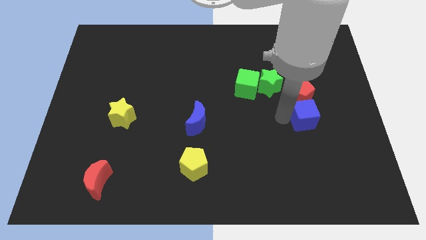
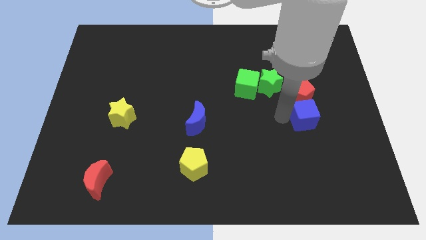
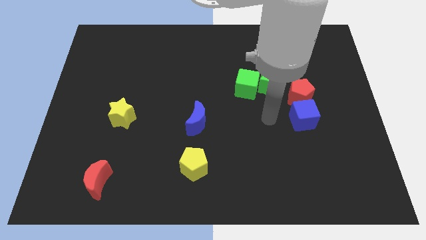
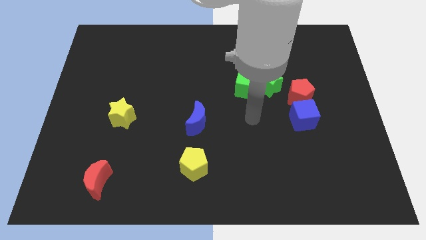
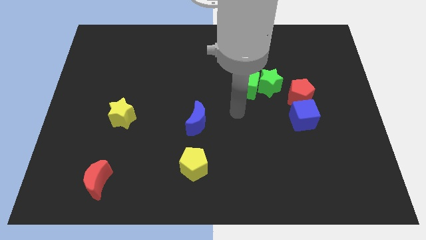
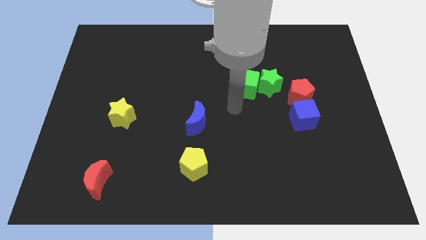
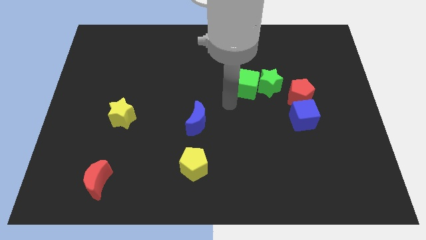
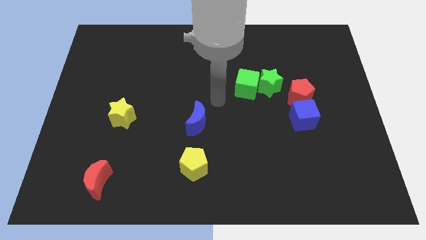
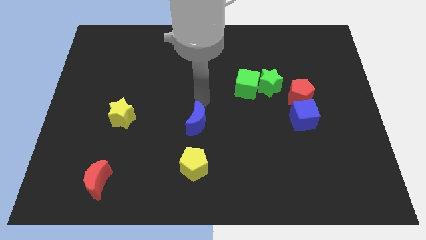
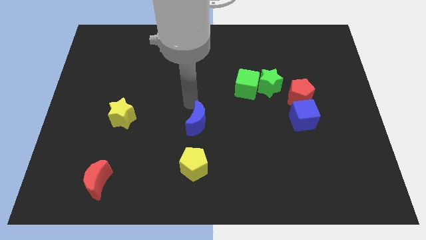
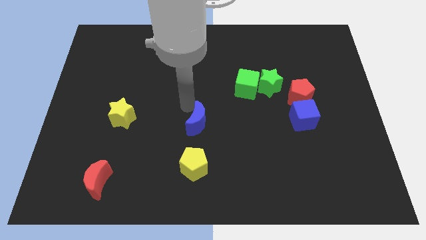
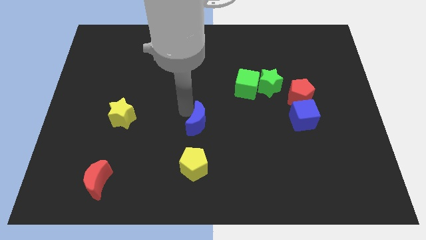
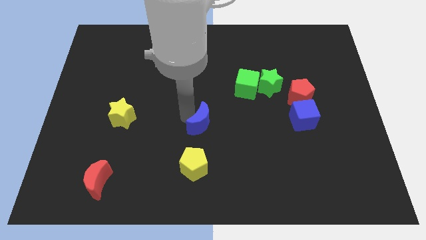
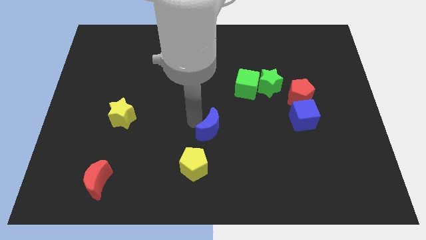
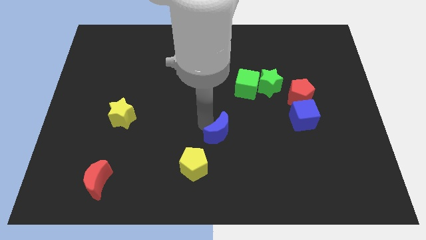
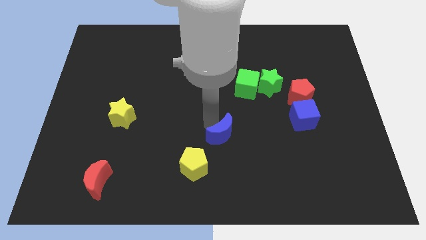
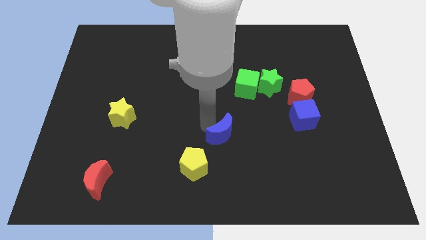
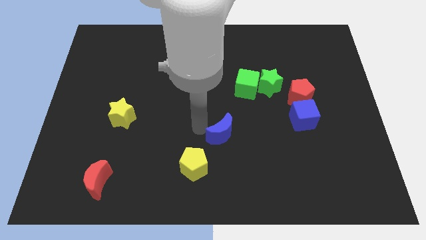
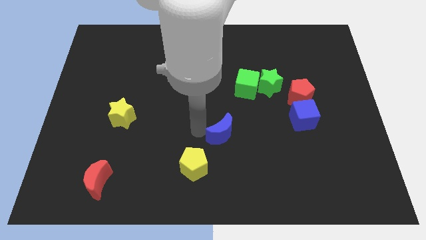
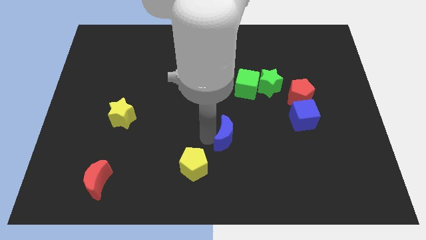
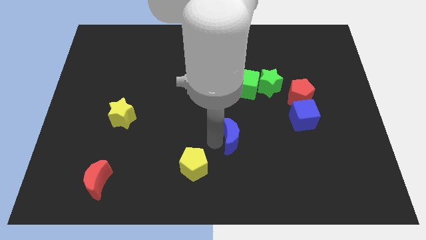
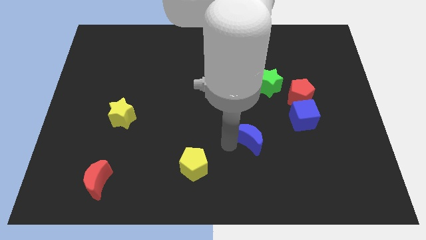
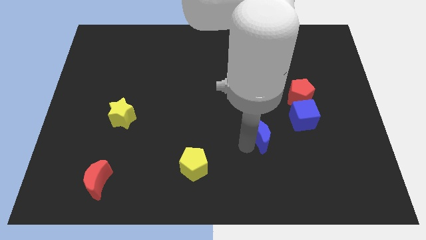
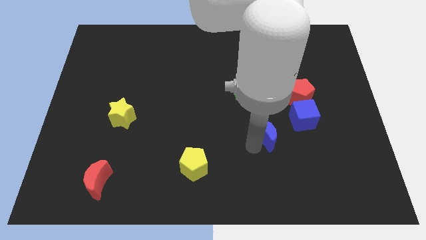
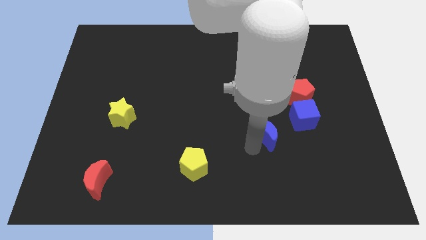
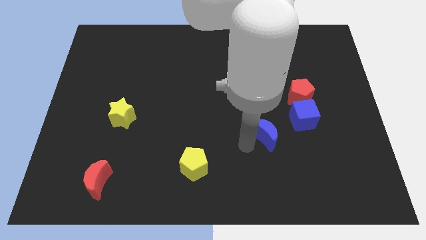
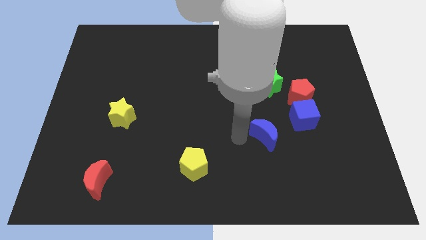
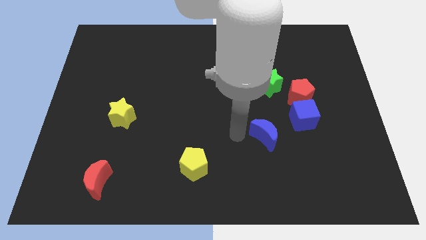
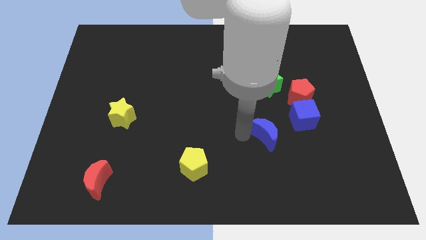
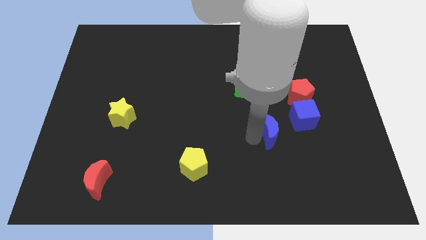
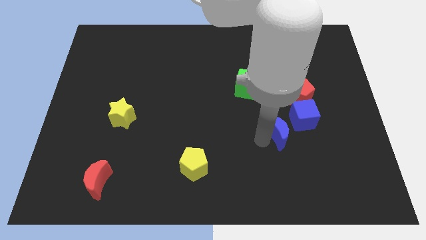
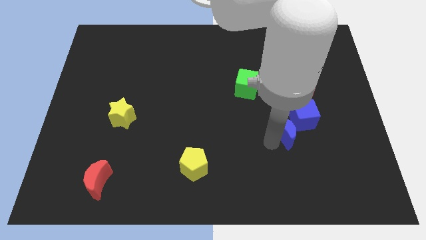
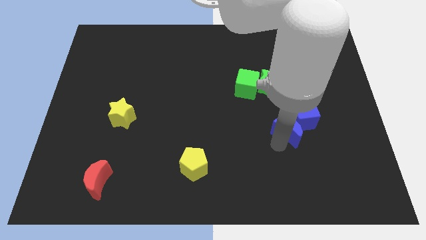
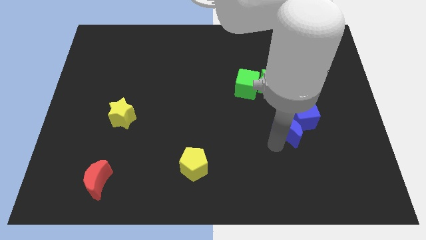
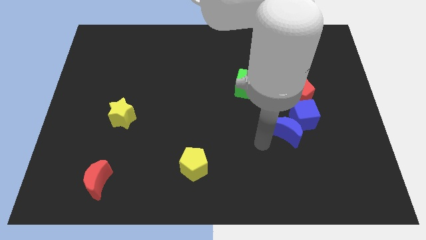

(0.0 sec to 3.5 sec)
move the blue moon into a blue cube

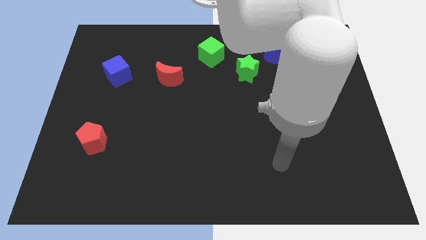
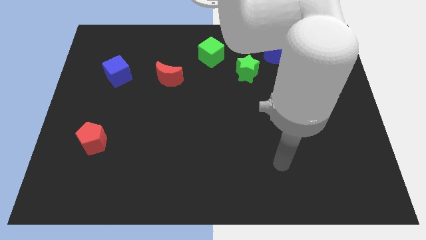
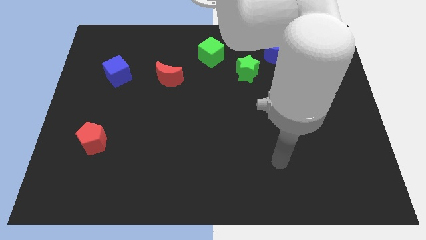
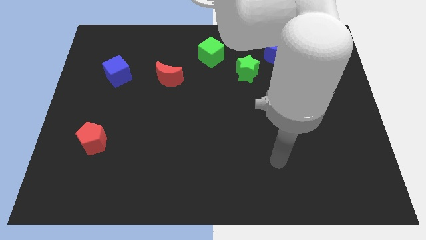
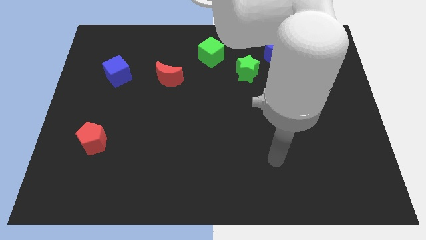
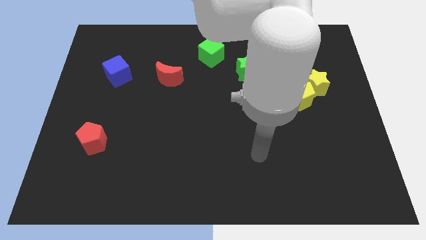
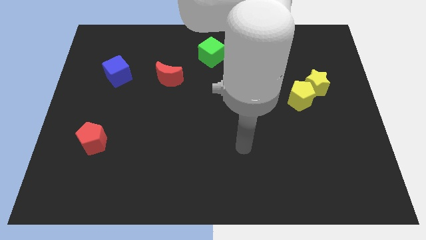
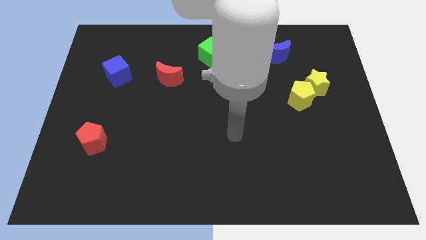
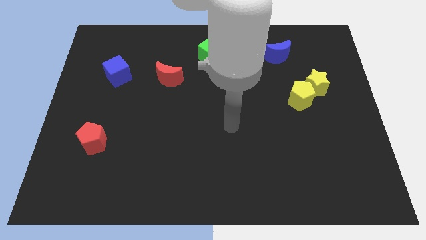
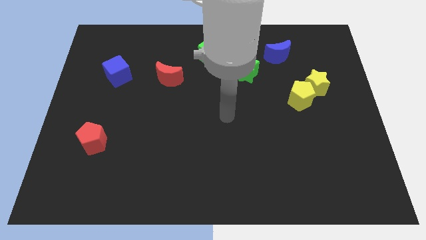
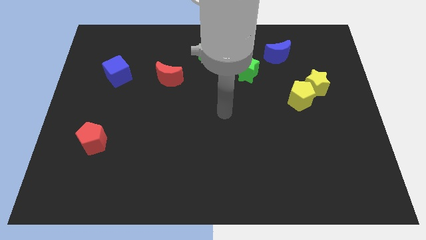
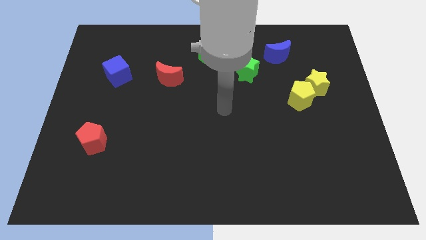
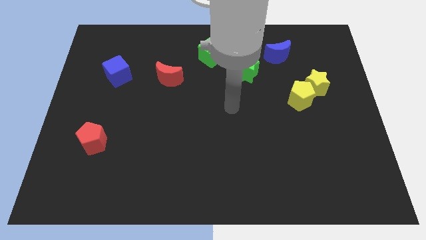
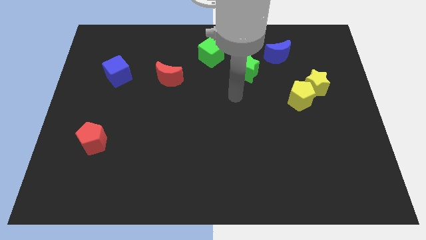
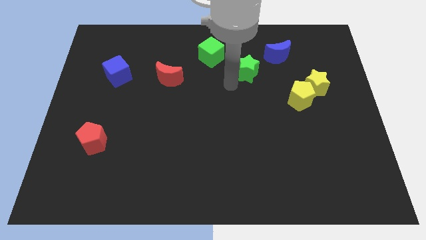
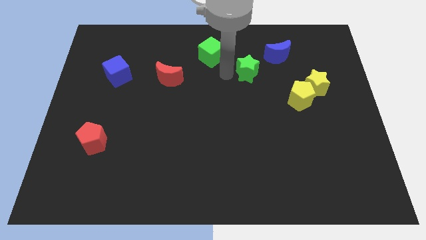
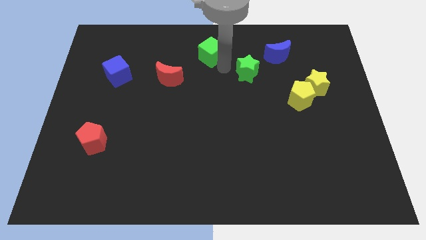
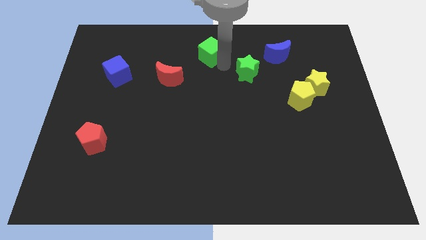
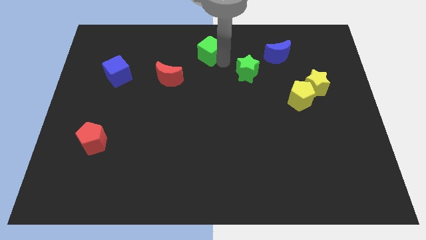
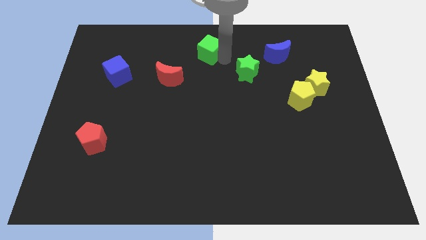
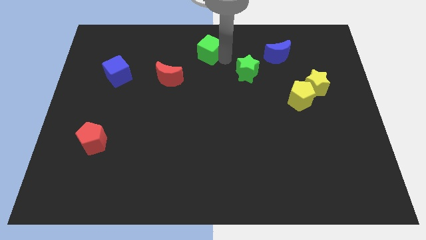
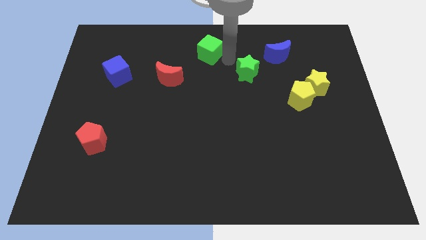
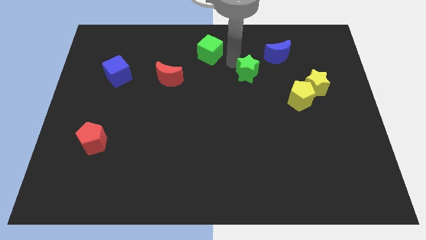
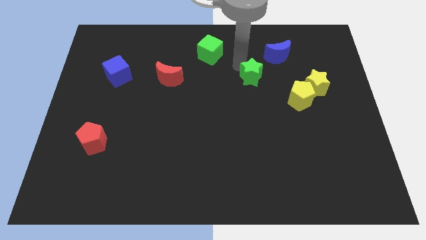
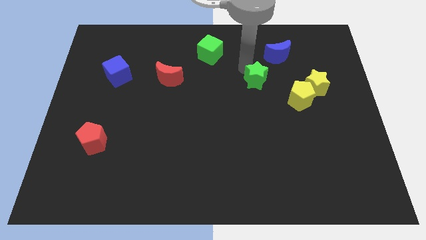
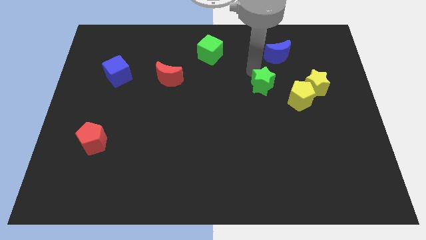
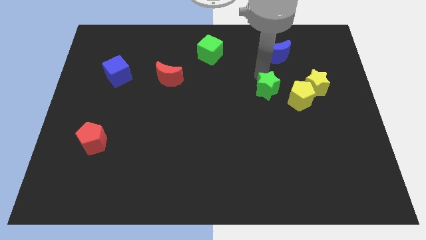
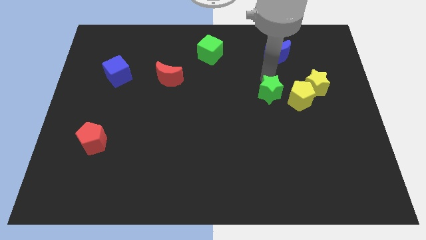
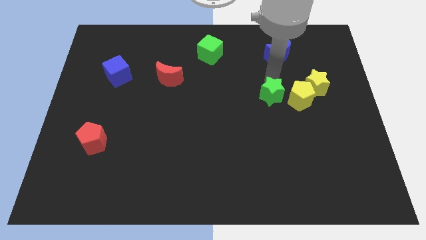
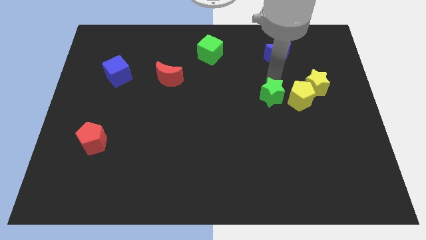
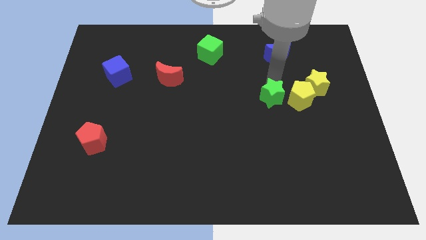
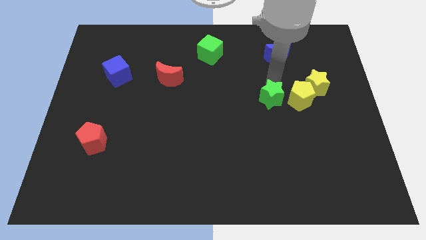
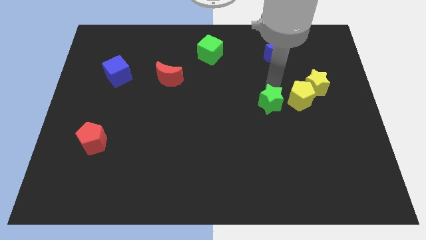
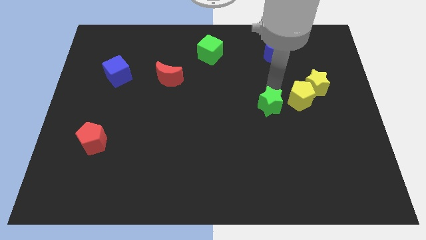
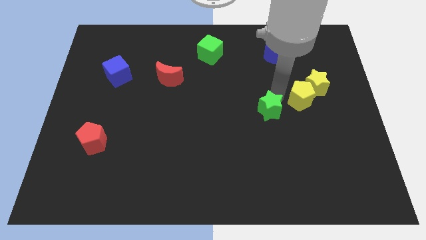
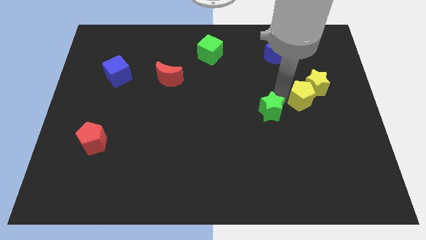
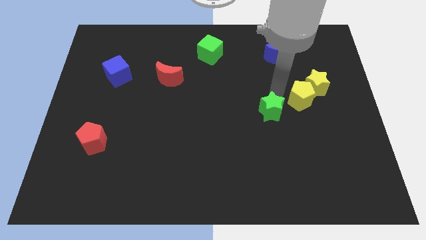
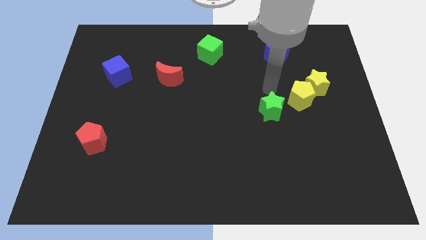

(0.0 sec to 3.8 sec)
push green star and green cube apart

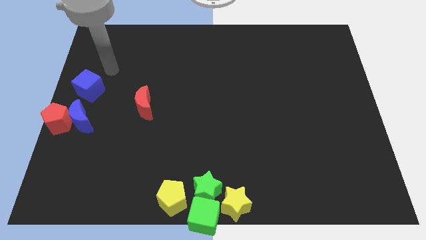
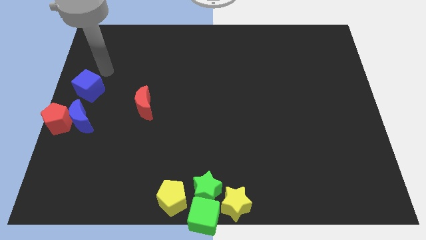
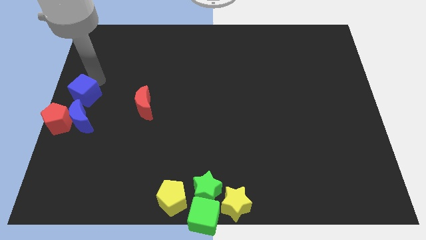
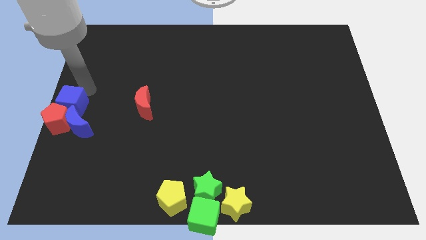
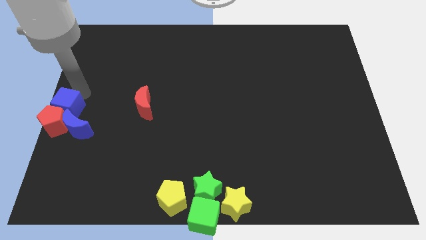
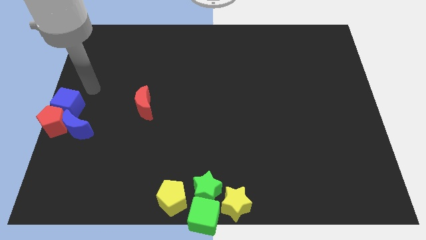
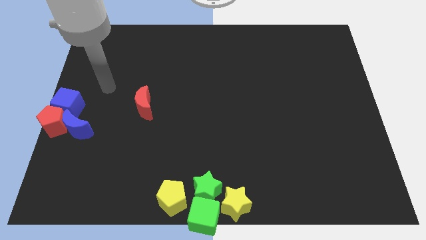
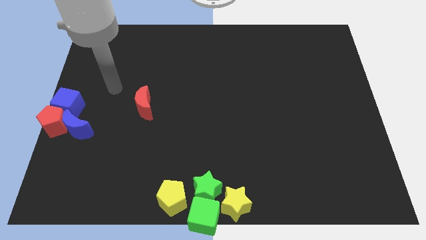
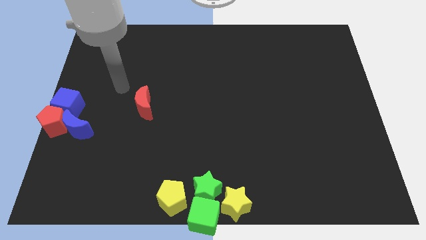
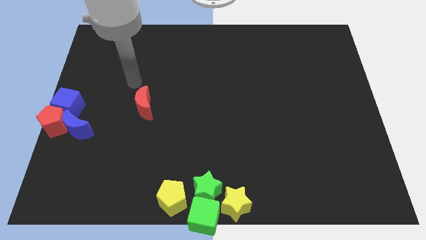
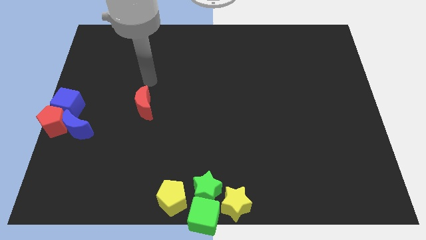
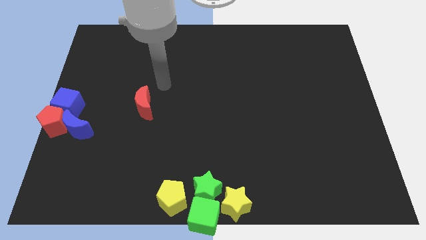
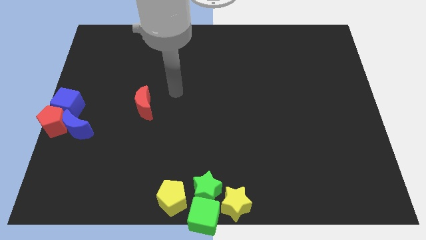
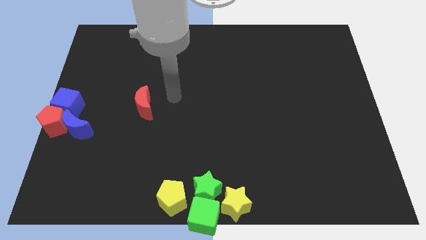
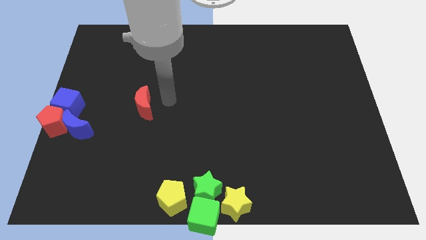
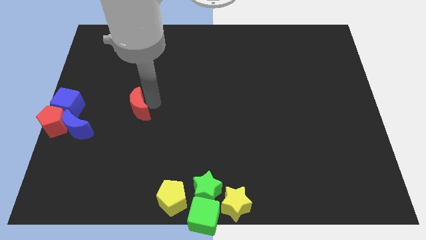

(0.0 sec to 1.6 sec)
move the blue cube into the red pentagon
